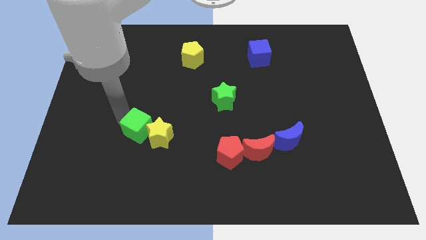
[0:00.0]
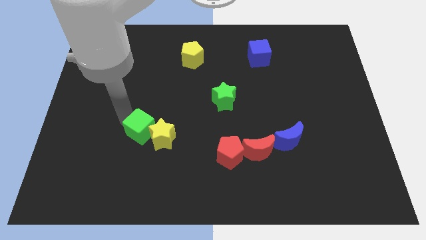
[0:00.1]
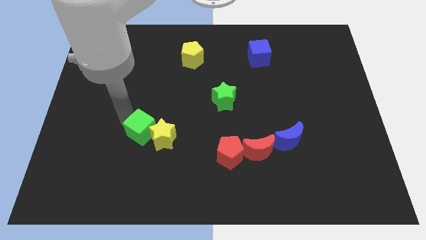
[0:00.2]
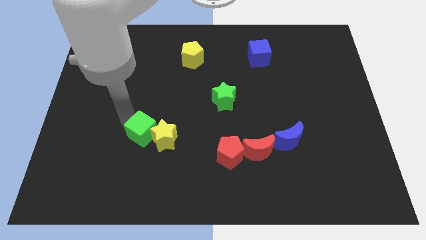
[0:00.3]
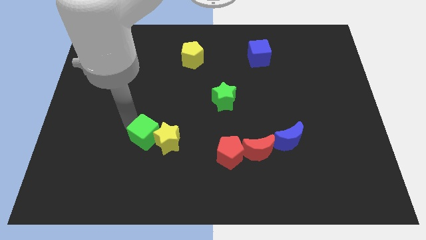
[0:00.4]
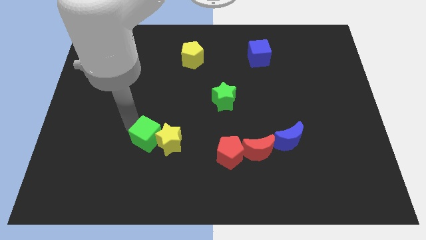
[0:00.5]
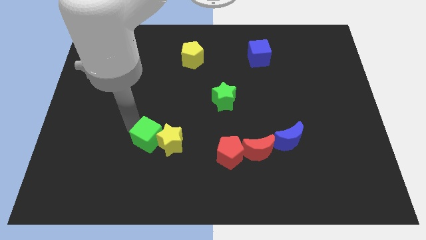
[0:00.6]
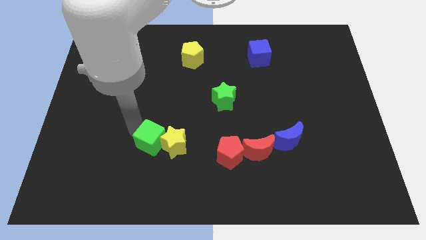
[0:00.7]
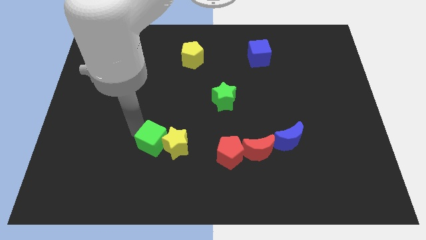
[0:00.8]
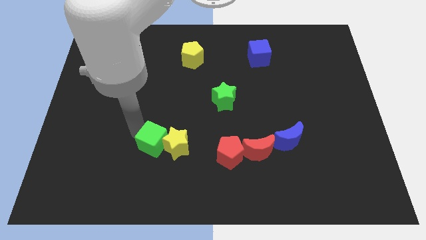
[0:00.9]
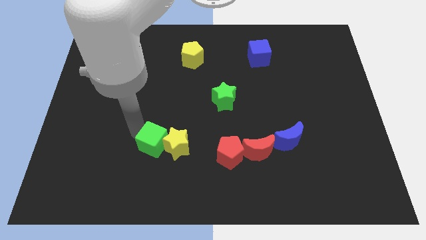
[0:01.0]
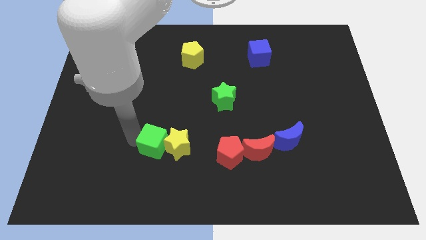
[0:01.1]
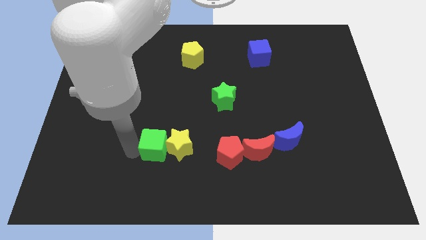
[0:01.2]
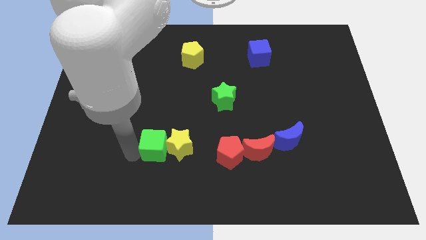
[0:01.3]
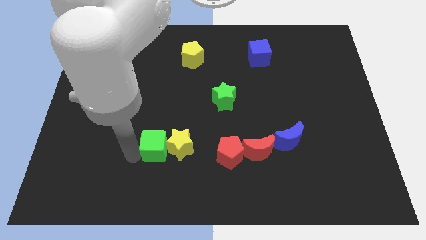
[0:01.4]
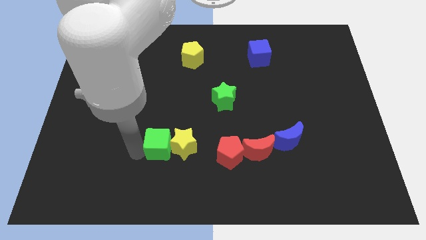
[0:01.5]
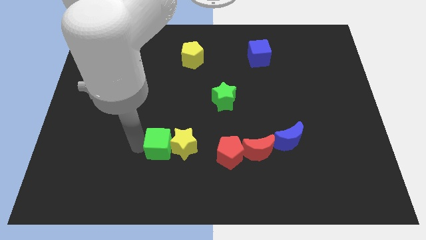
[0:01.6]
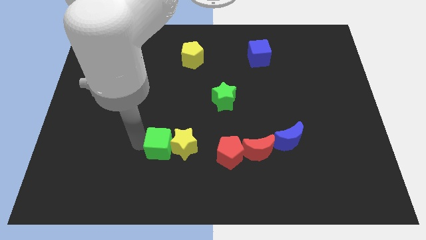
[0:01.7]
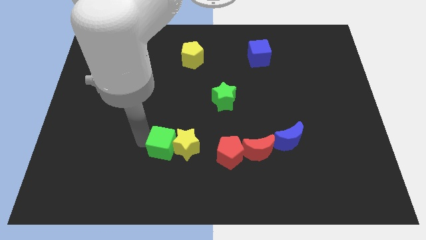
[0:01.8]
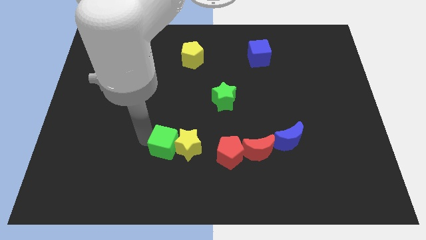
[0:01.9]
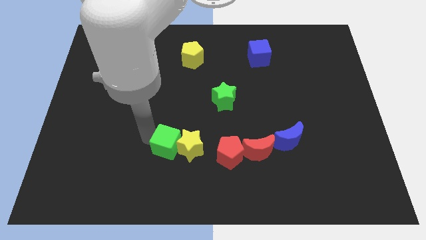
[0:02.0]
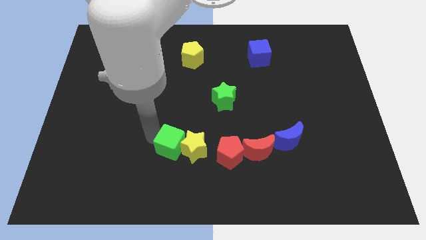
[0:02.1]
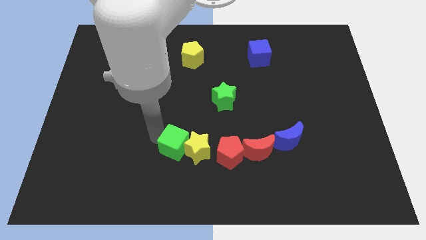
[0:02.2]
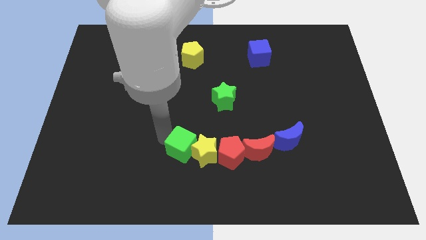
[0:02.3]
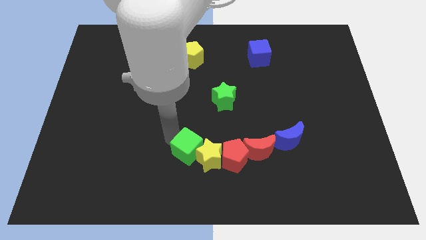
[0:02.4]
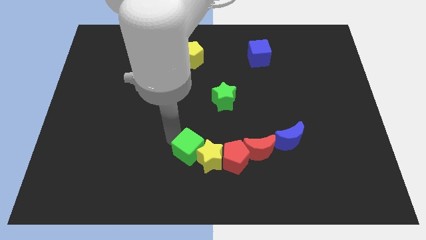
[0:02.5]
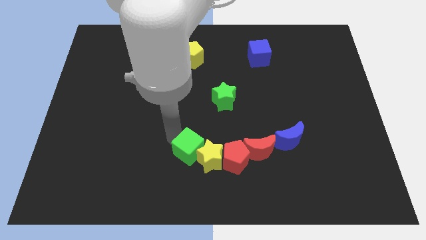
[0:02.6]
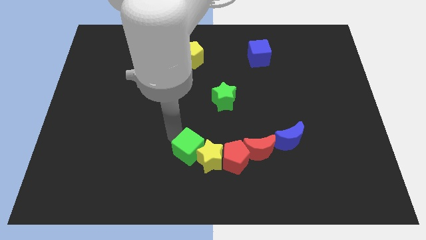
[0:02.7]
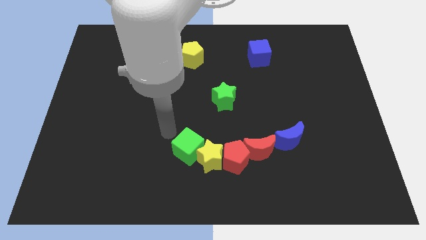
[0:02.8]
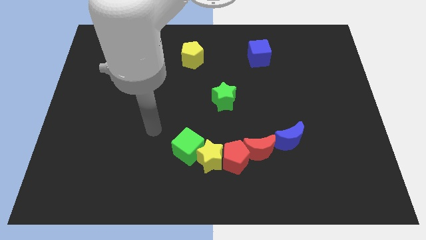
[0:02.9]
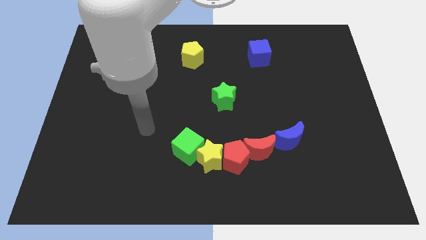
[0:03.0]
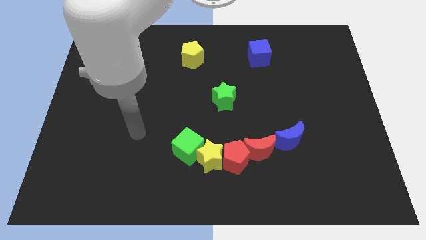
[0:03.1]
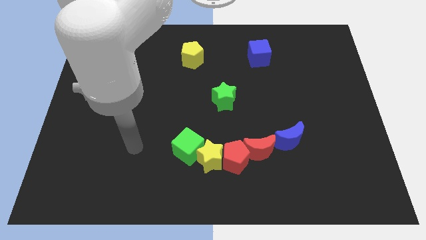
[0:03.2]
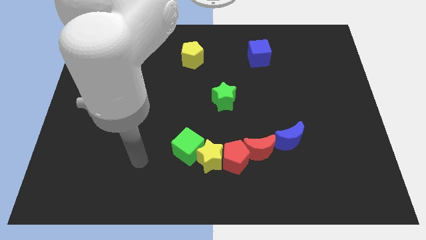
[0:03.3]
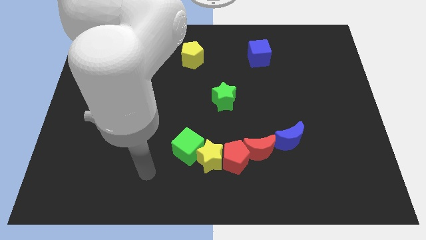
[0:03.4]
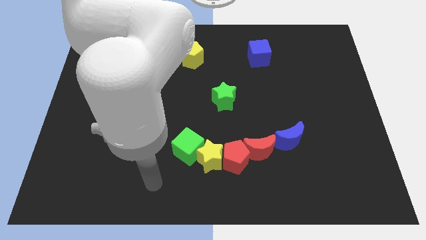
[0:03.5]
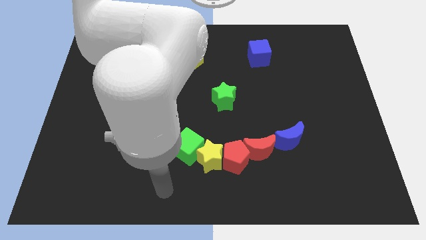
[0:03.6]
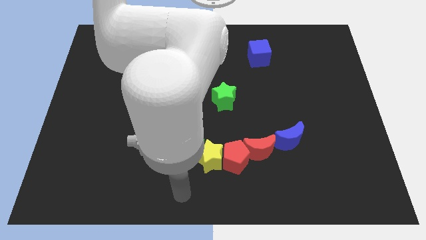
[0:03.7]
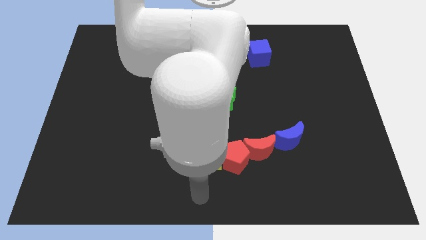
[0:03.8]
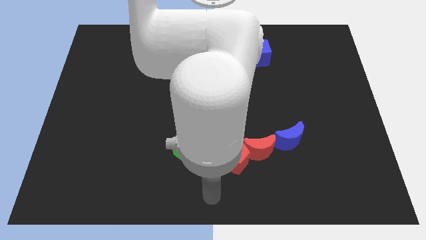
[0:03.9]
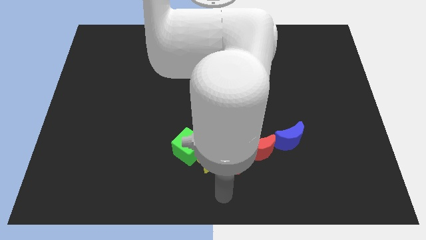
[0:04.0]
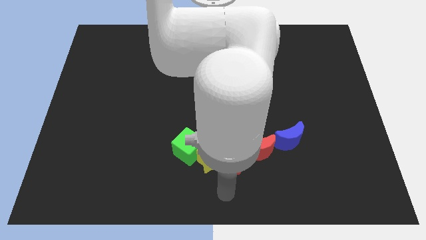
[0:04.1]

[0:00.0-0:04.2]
push the yellow star along with the green cube towards bottom center

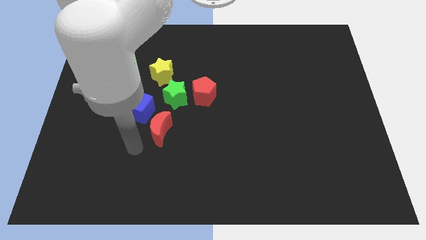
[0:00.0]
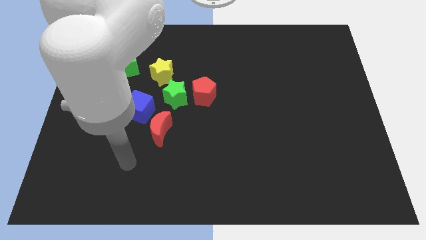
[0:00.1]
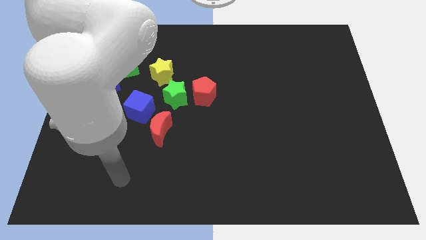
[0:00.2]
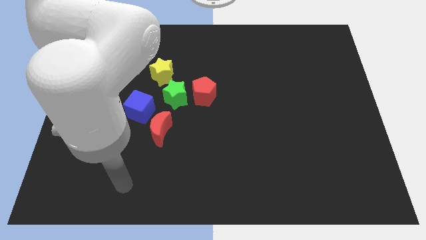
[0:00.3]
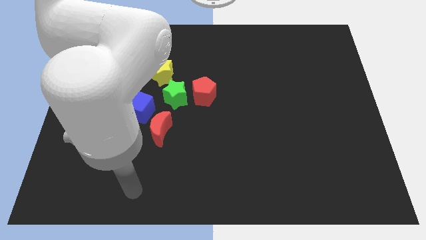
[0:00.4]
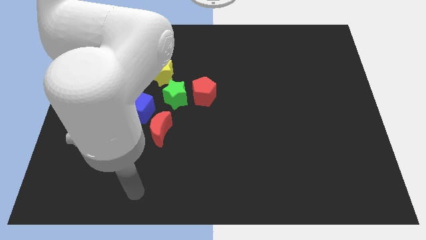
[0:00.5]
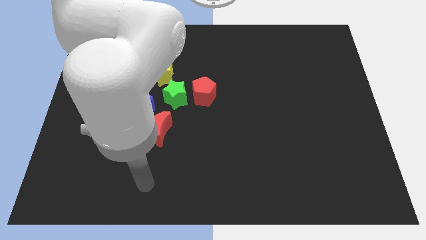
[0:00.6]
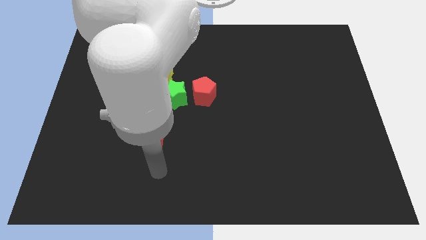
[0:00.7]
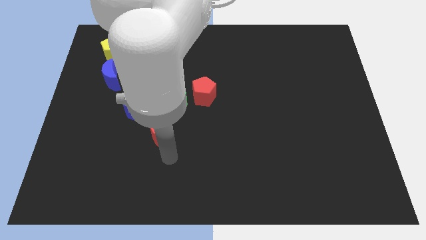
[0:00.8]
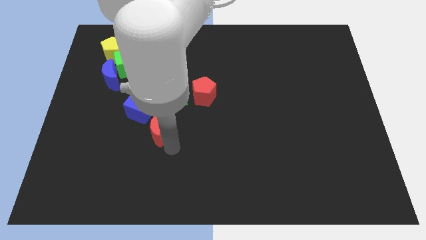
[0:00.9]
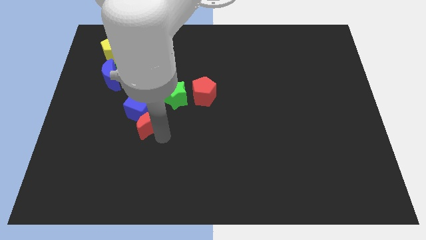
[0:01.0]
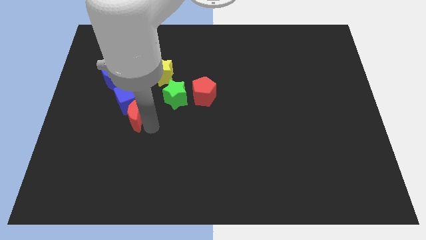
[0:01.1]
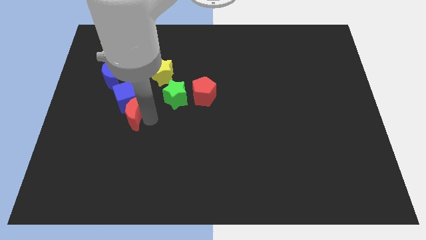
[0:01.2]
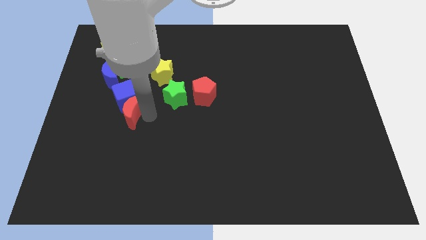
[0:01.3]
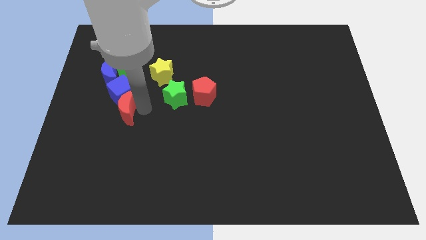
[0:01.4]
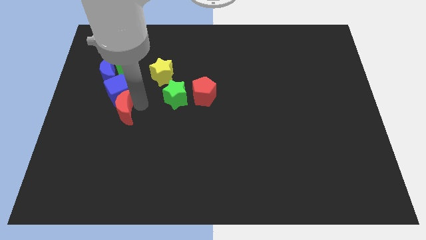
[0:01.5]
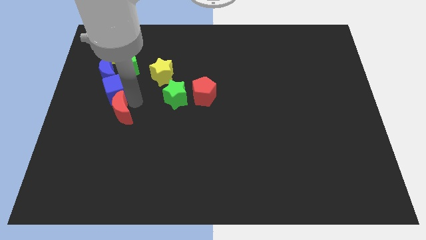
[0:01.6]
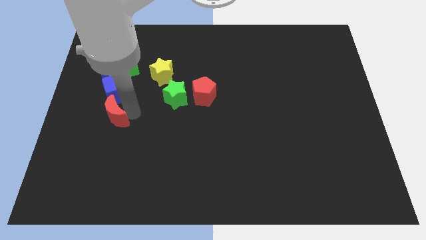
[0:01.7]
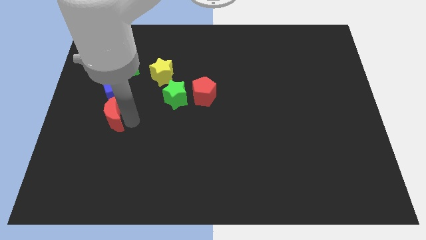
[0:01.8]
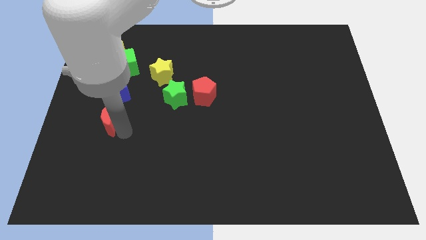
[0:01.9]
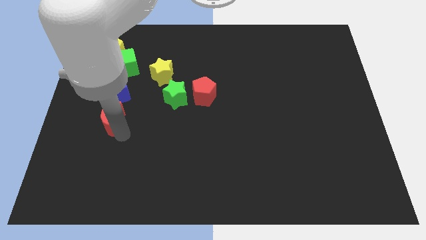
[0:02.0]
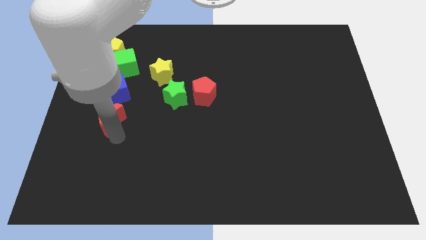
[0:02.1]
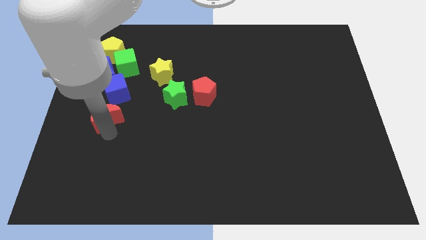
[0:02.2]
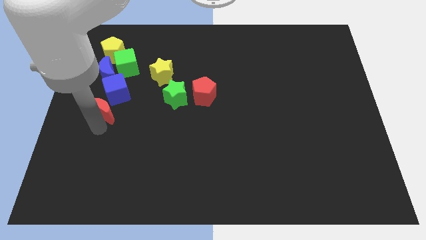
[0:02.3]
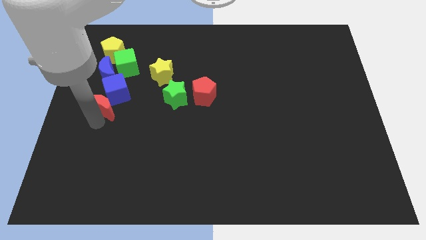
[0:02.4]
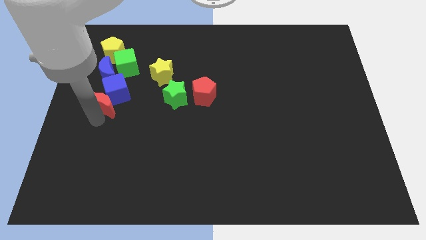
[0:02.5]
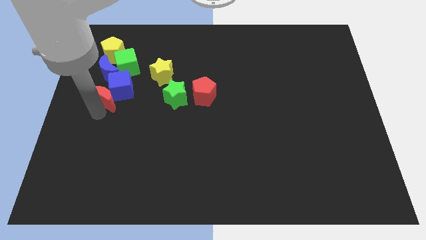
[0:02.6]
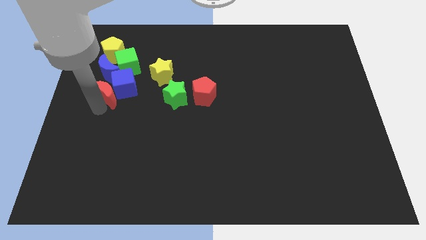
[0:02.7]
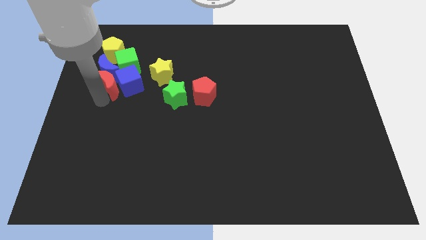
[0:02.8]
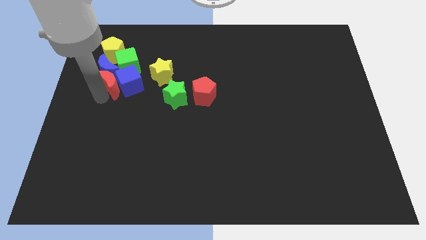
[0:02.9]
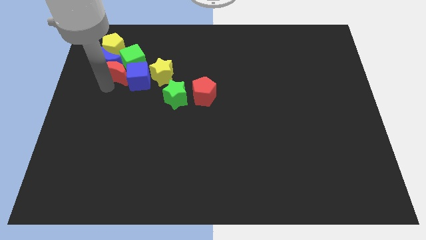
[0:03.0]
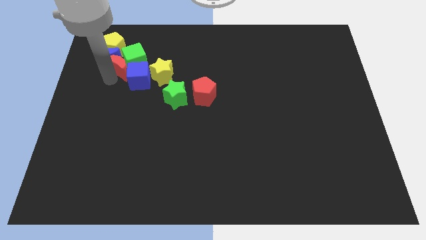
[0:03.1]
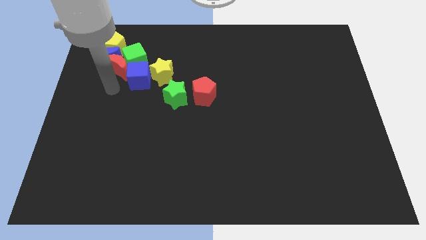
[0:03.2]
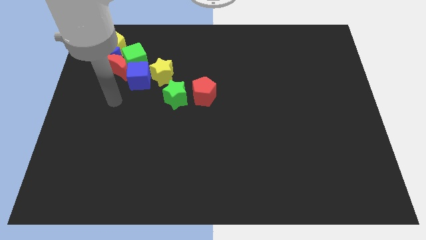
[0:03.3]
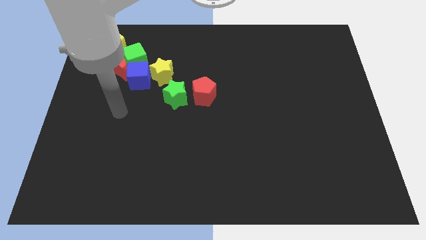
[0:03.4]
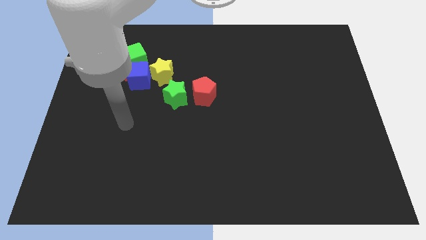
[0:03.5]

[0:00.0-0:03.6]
move the red crescent close to the left of the green cube

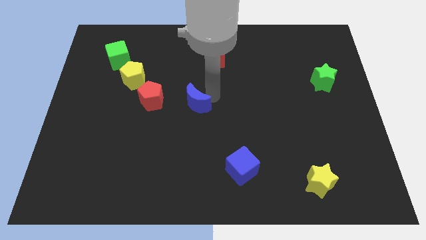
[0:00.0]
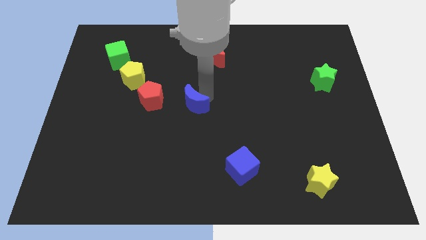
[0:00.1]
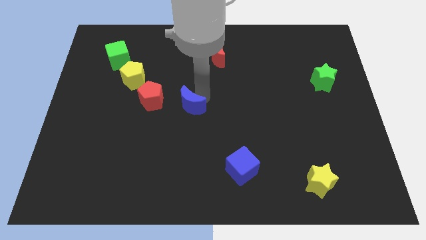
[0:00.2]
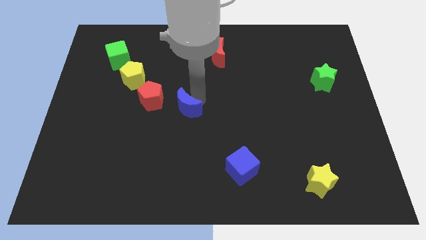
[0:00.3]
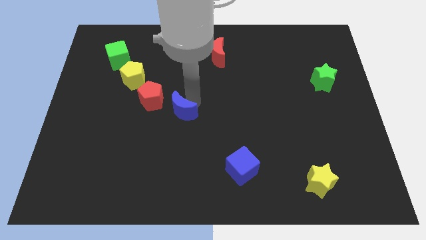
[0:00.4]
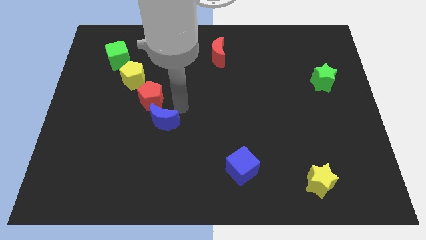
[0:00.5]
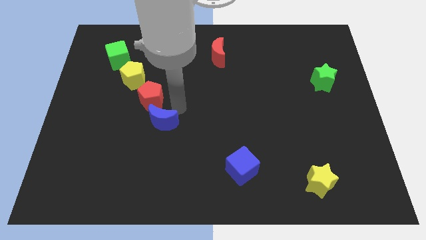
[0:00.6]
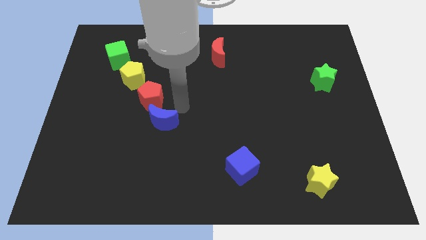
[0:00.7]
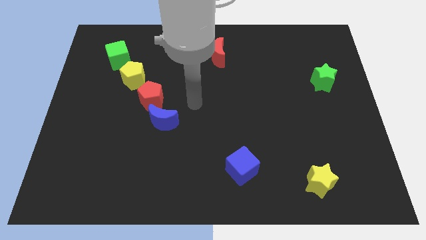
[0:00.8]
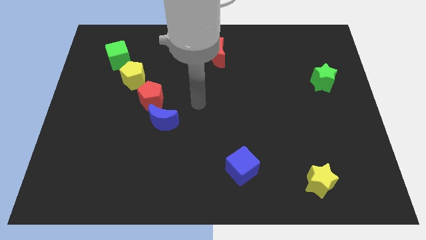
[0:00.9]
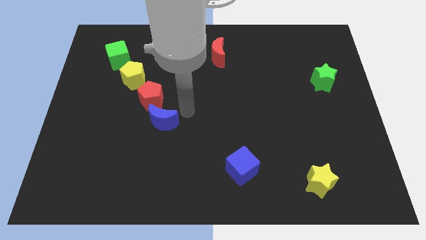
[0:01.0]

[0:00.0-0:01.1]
place blue moon below red pentagon

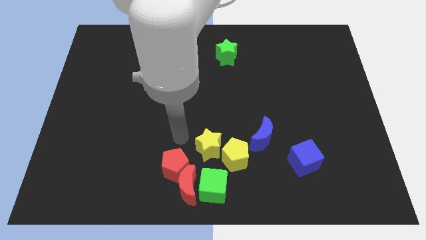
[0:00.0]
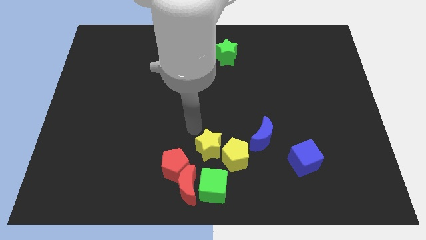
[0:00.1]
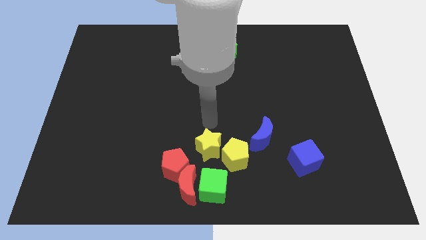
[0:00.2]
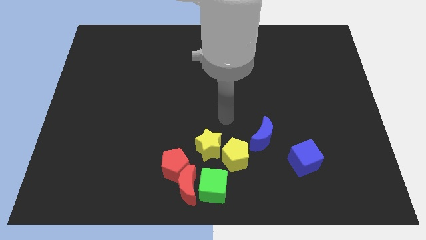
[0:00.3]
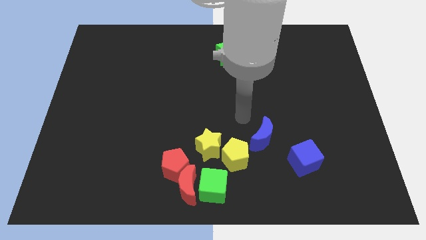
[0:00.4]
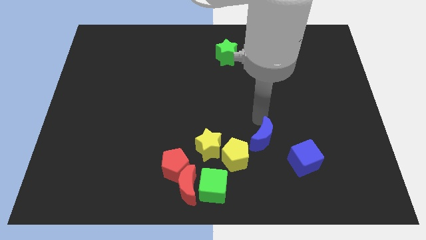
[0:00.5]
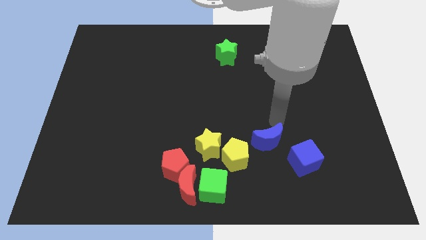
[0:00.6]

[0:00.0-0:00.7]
move your arm to the blue moon
